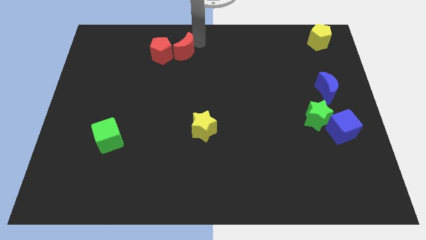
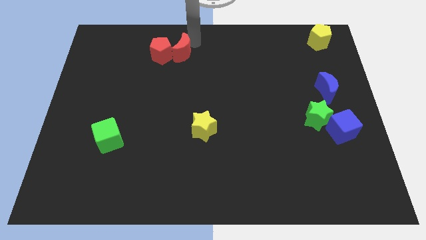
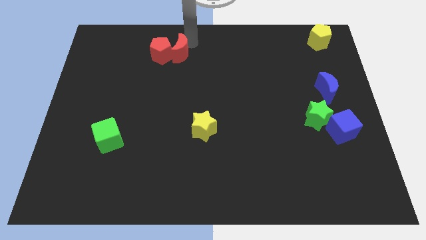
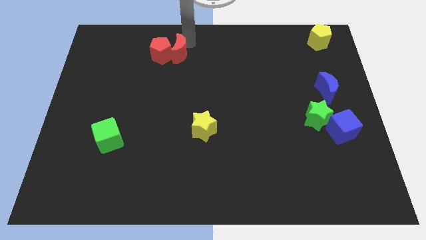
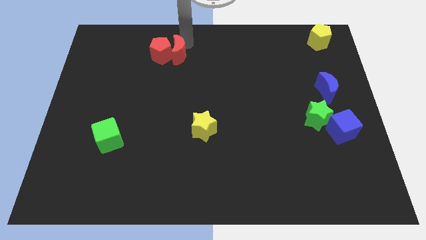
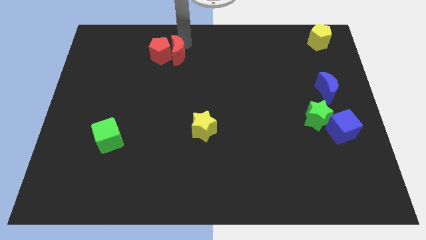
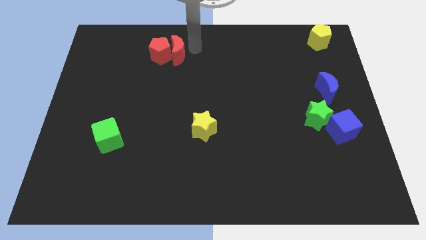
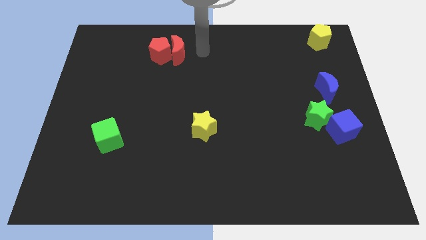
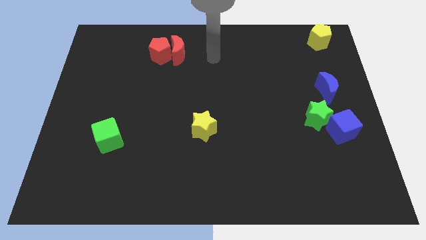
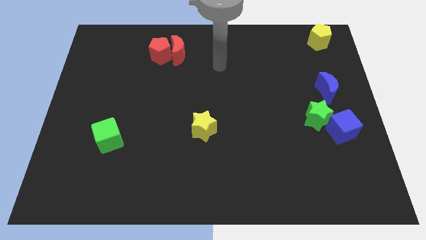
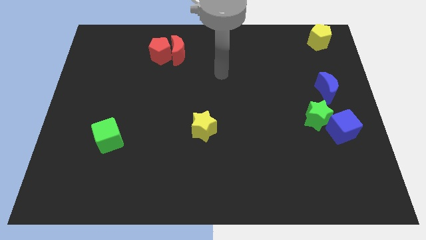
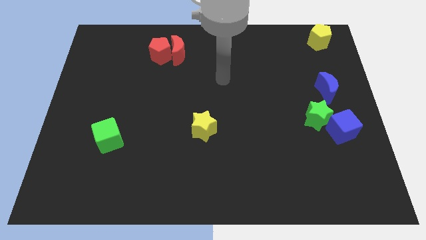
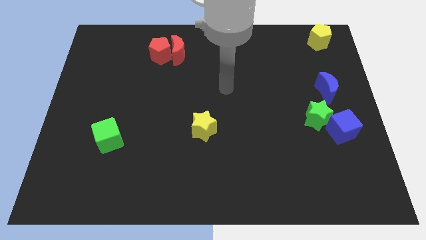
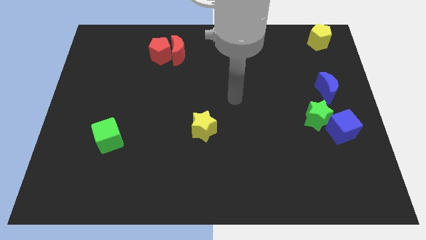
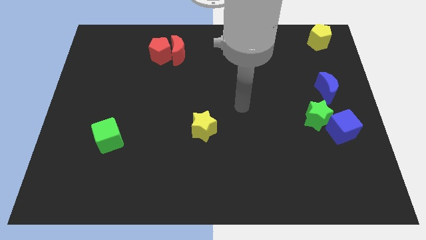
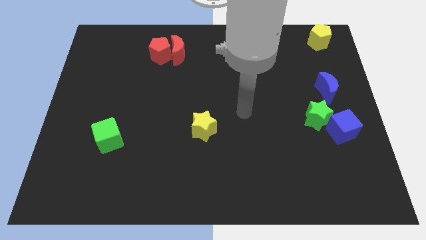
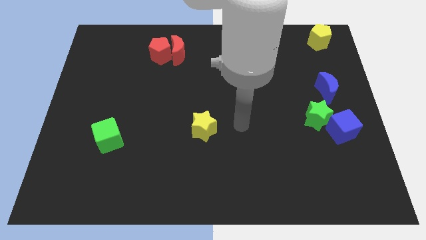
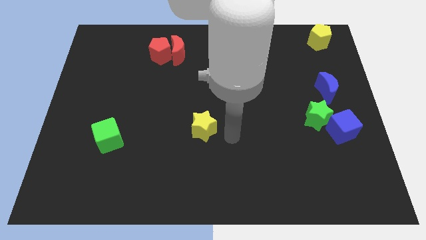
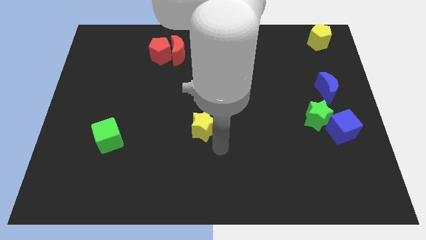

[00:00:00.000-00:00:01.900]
place your arm below the yellow star

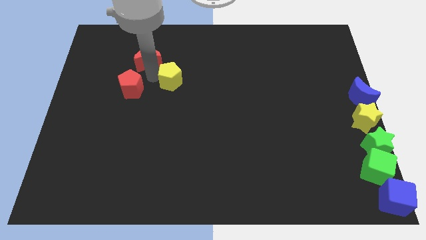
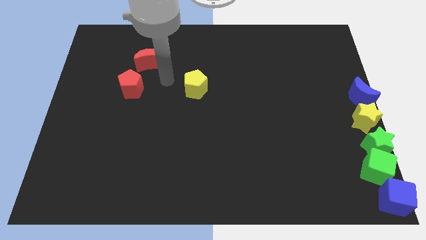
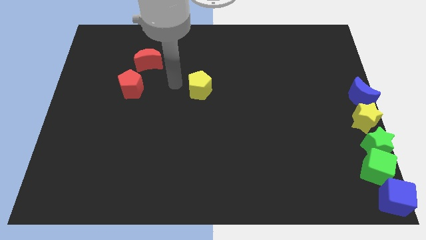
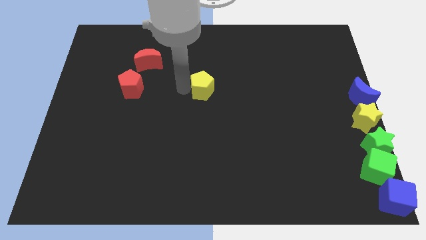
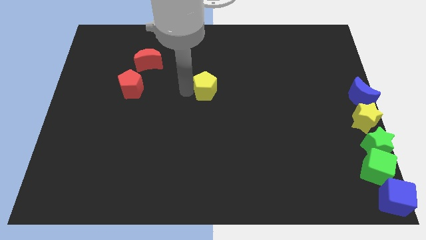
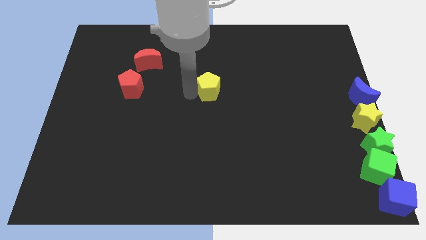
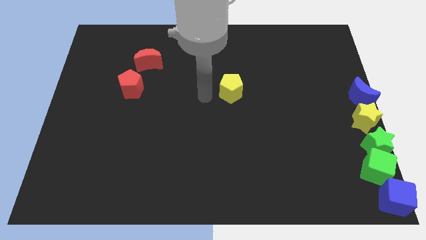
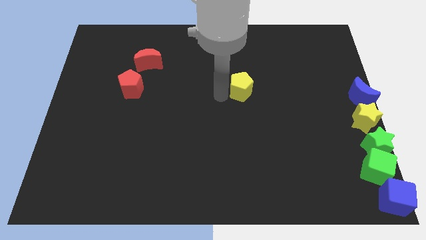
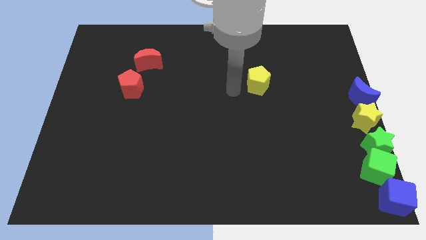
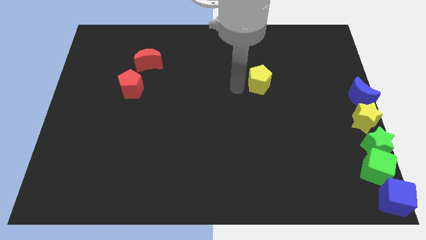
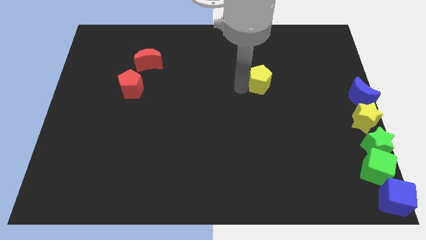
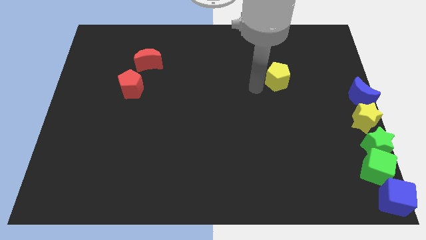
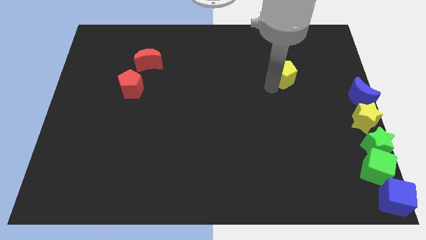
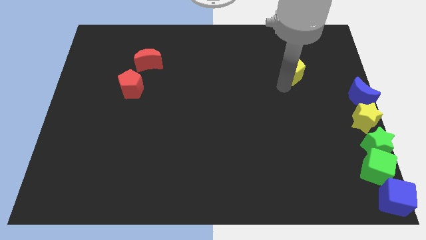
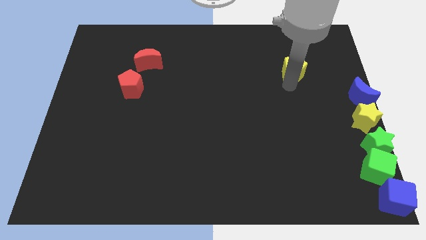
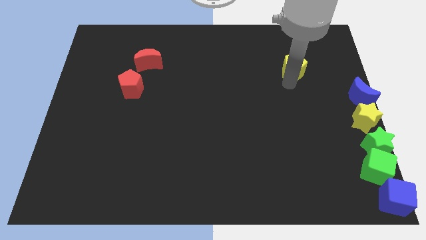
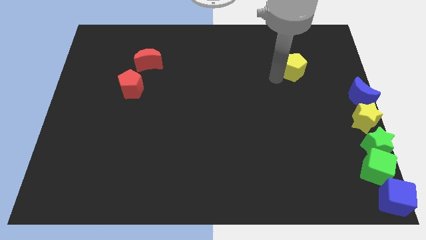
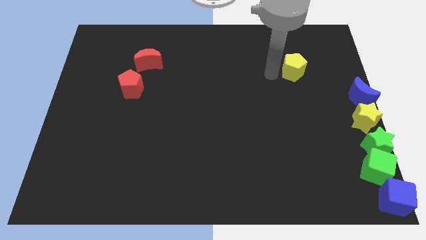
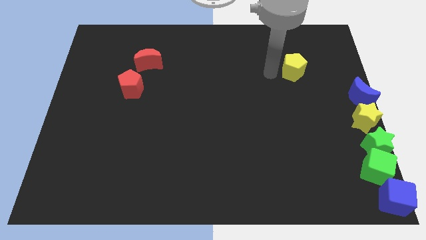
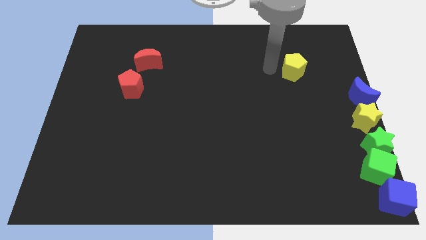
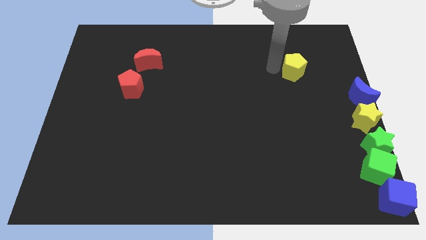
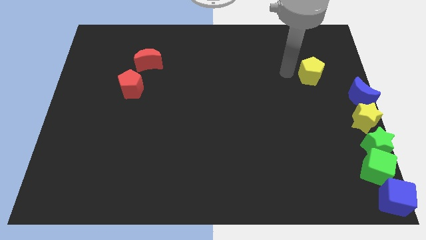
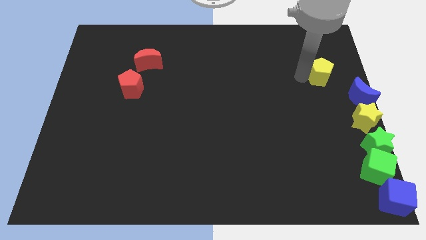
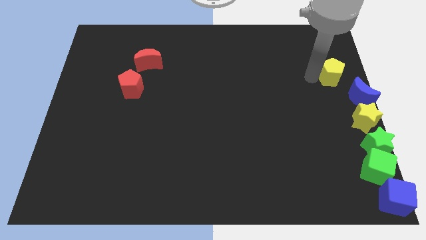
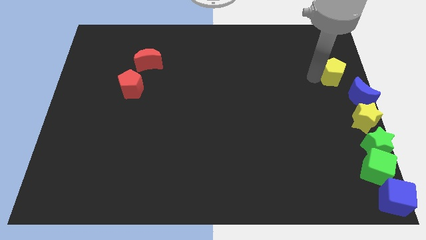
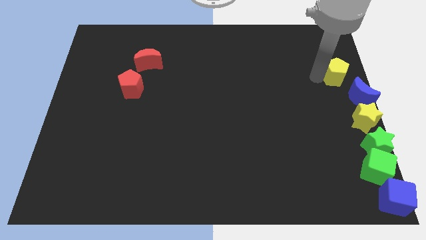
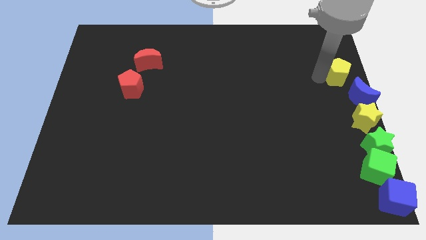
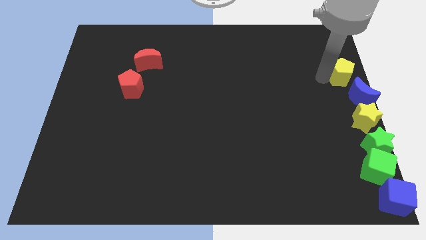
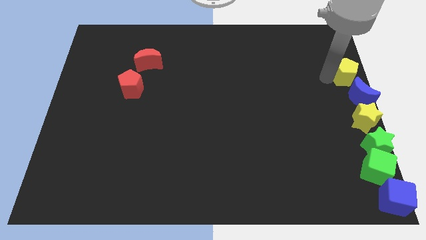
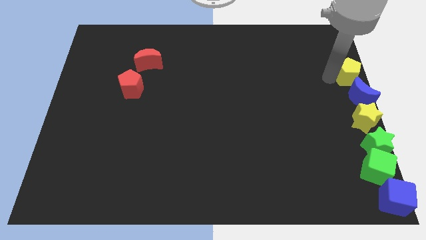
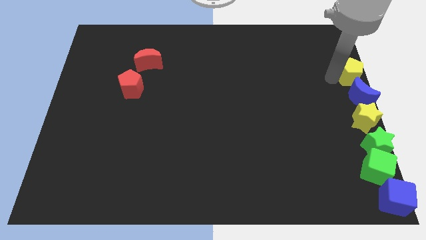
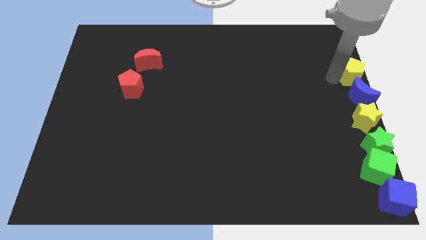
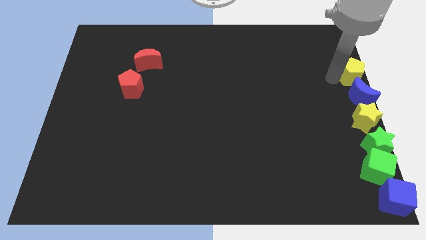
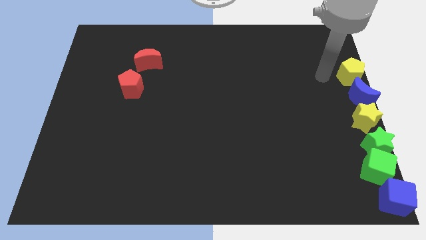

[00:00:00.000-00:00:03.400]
place the yellow pentagon above the blue moon

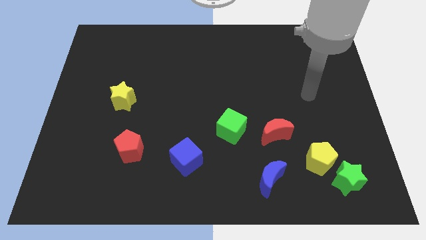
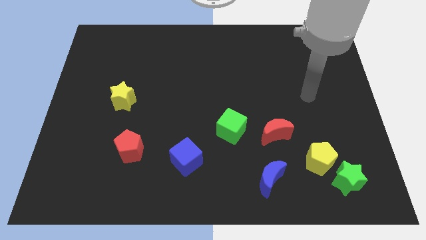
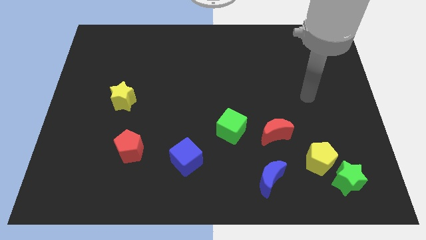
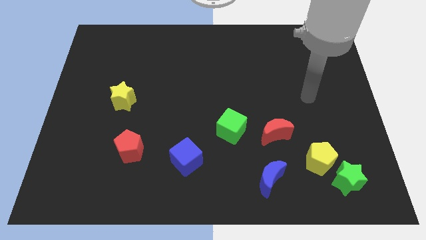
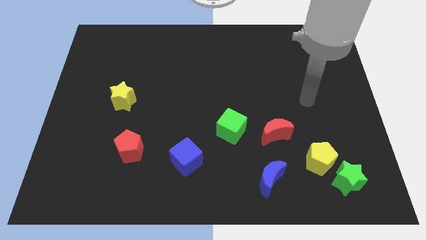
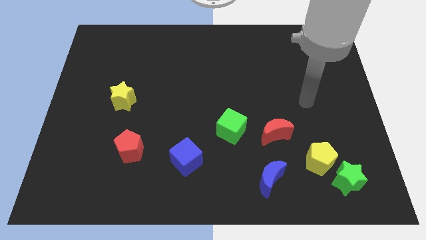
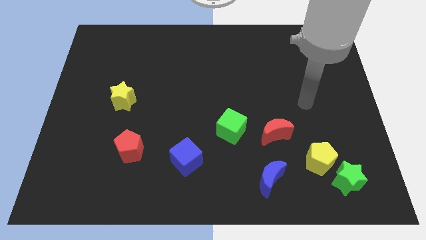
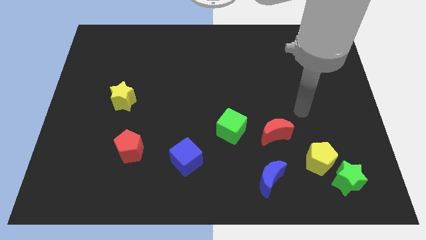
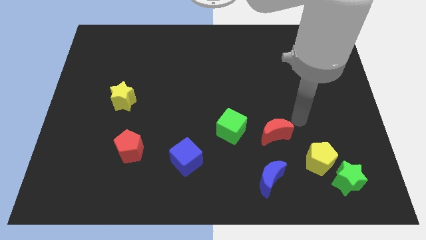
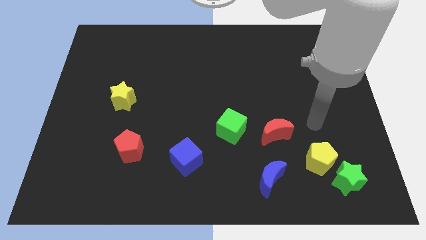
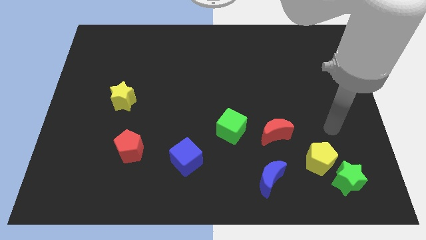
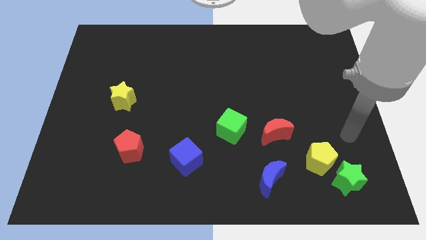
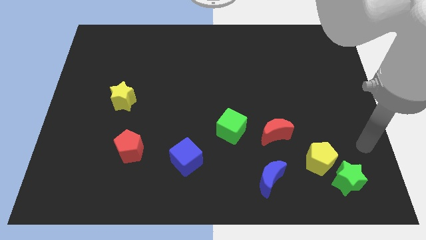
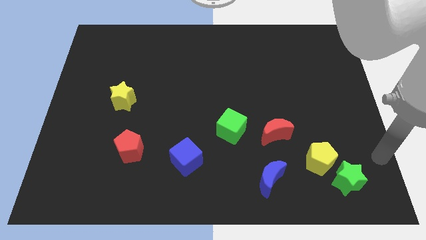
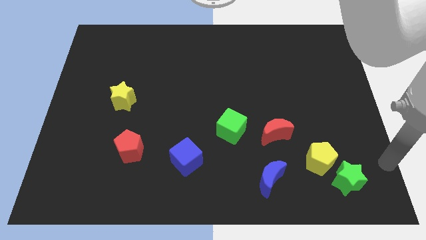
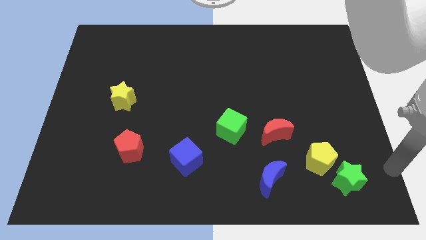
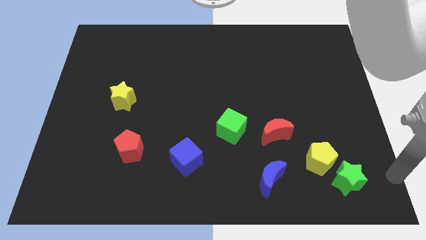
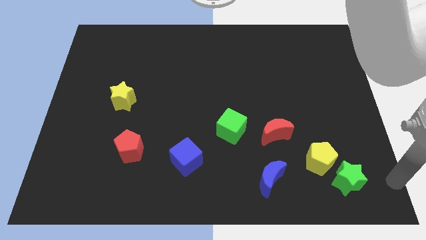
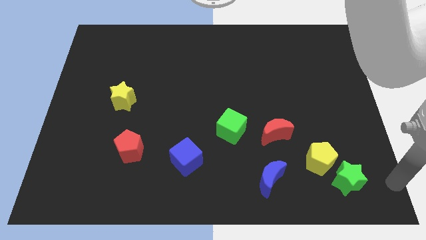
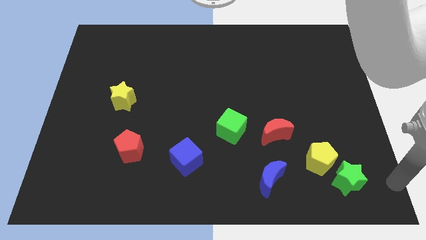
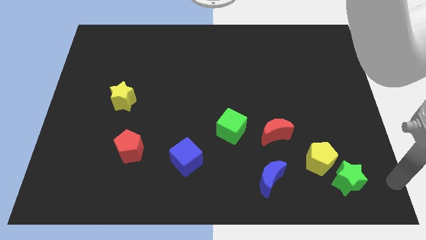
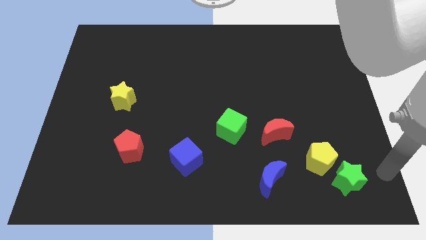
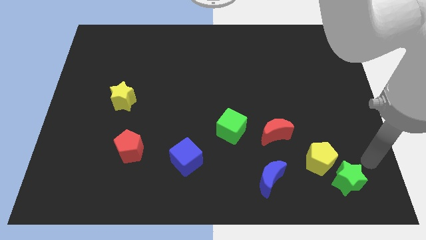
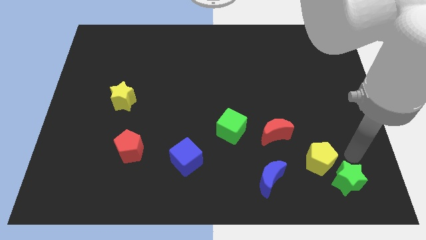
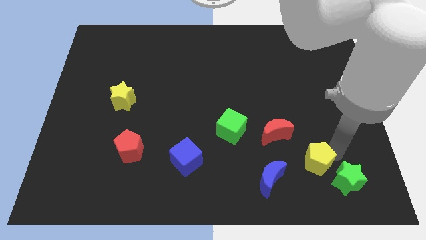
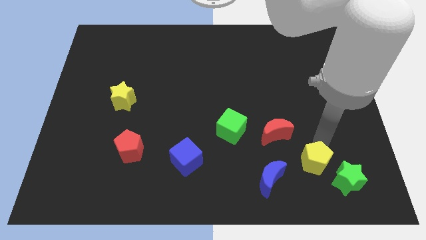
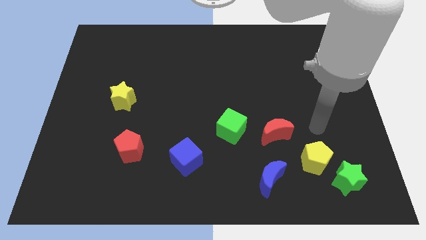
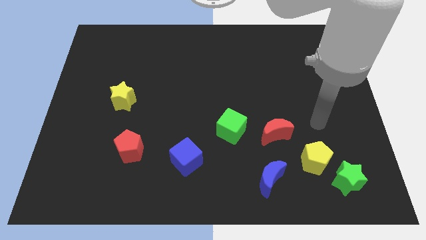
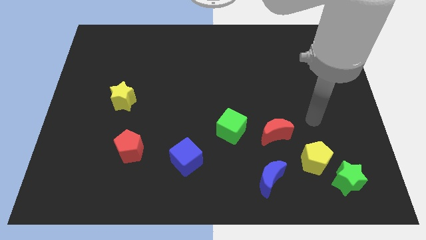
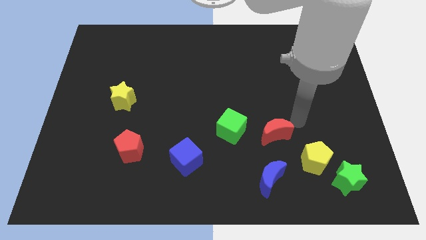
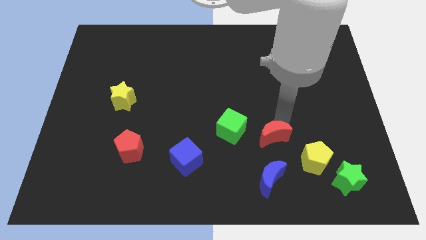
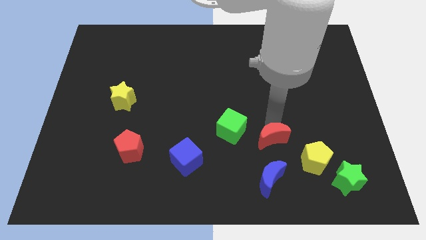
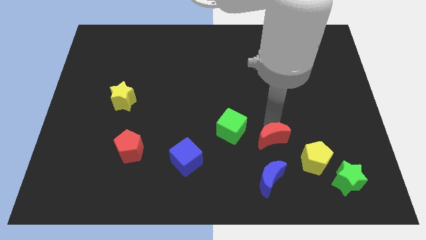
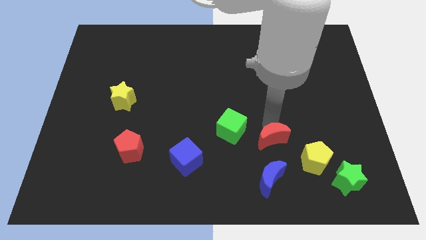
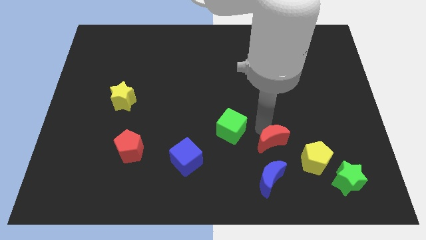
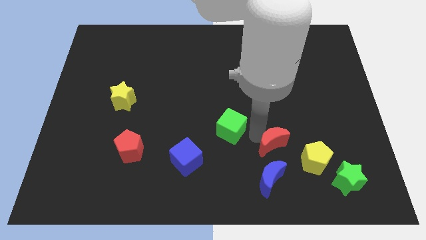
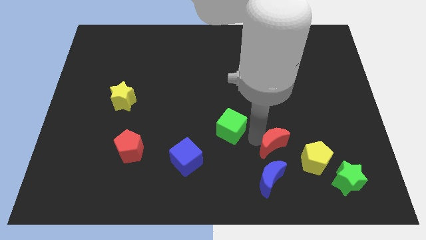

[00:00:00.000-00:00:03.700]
move the arm towards the green cube
